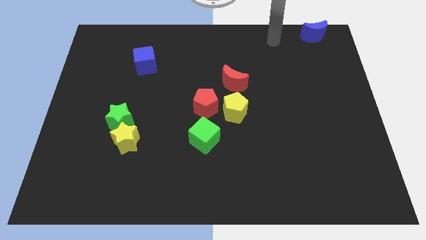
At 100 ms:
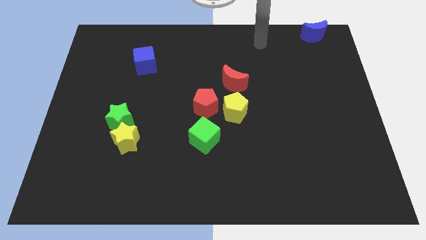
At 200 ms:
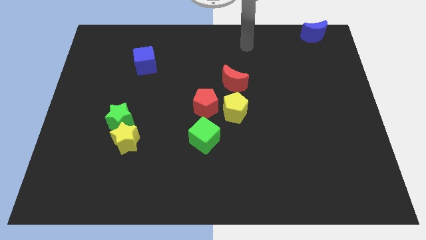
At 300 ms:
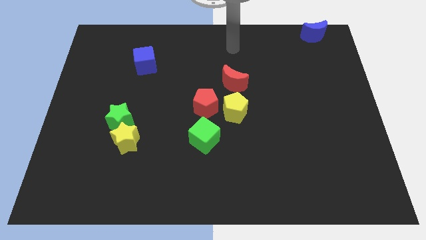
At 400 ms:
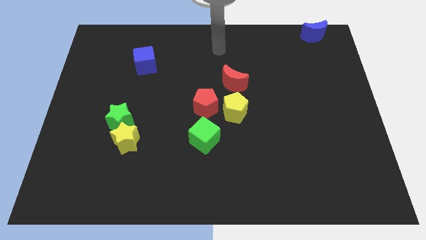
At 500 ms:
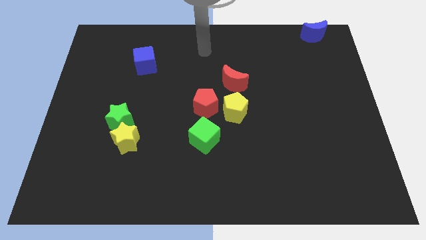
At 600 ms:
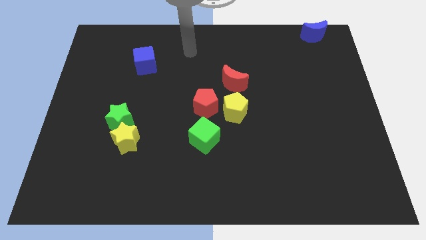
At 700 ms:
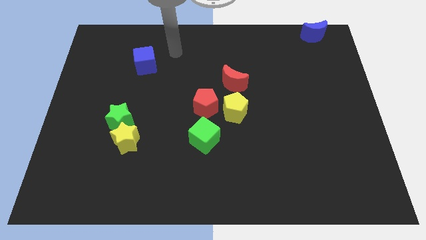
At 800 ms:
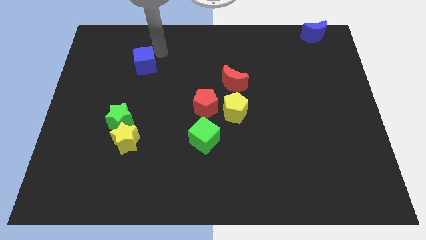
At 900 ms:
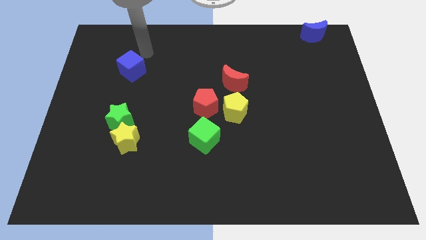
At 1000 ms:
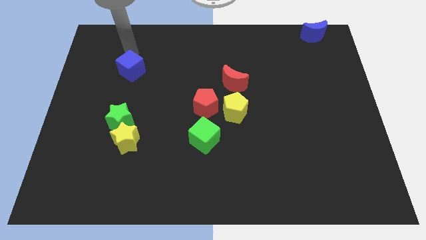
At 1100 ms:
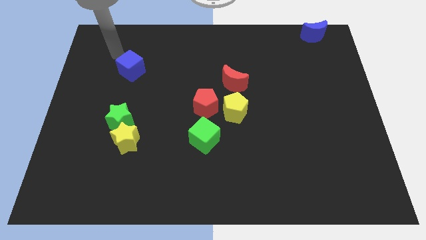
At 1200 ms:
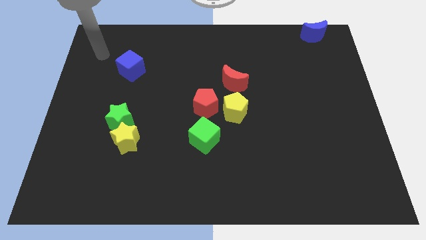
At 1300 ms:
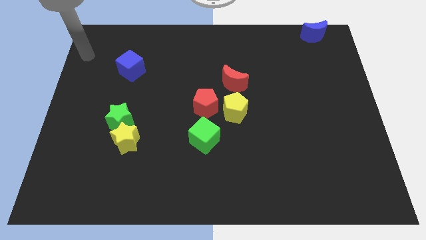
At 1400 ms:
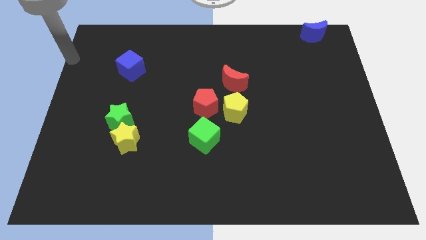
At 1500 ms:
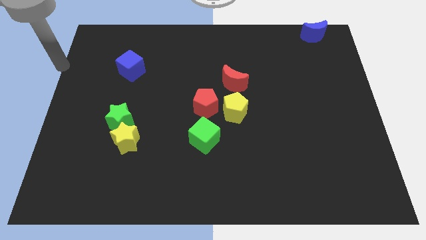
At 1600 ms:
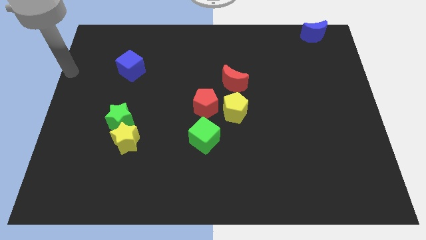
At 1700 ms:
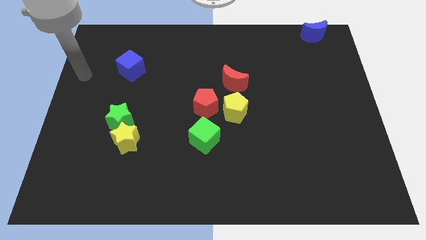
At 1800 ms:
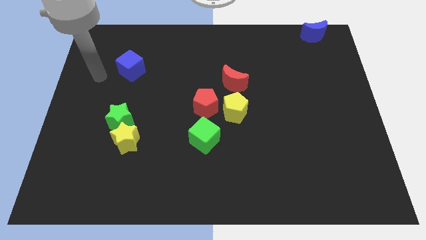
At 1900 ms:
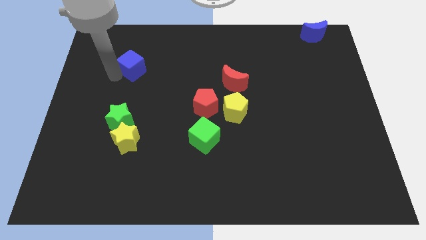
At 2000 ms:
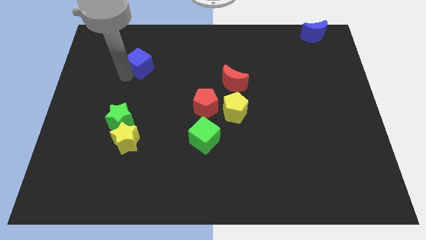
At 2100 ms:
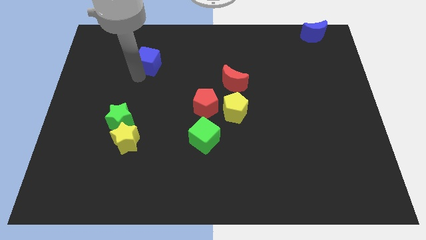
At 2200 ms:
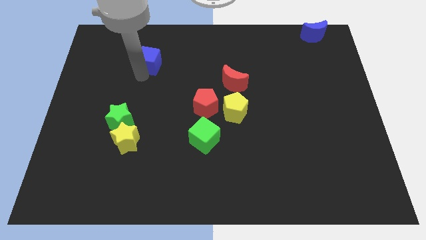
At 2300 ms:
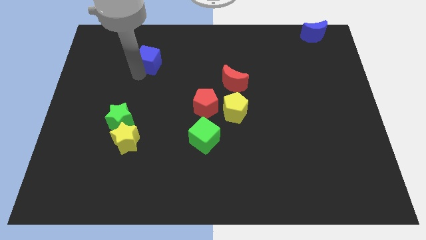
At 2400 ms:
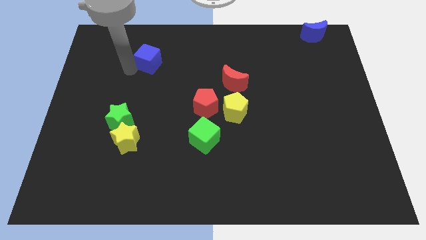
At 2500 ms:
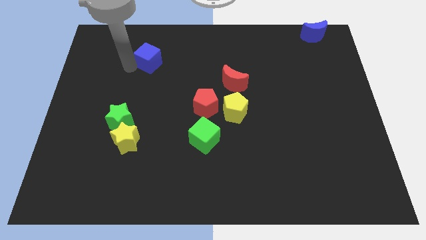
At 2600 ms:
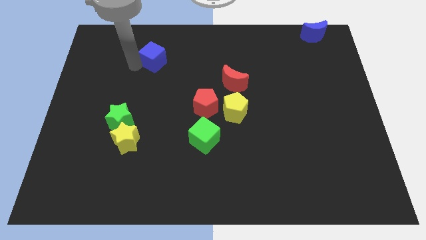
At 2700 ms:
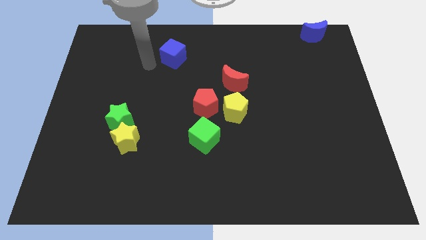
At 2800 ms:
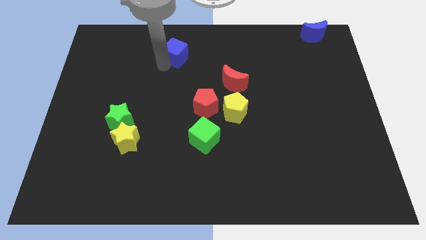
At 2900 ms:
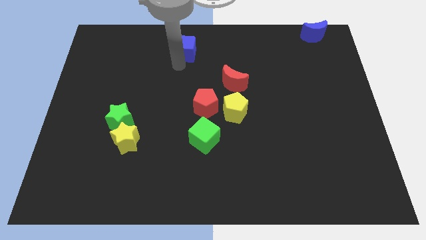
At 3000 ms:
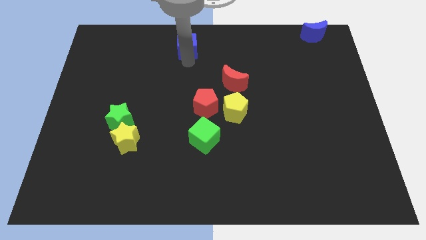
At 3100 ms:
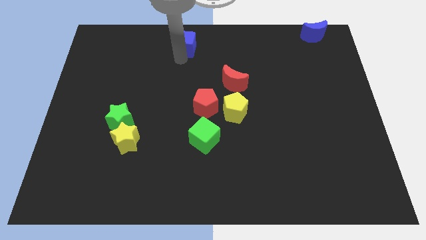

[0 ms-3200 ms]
move the blue cube towards the top center of the board

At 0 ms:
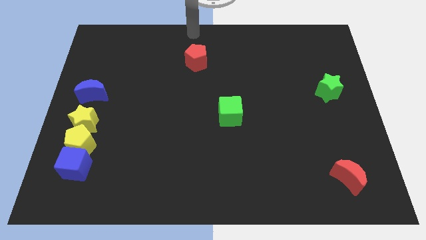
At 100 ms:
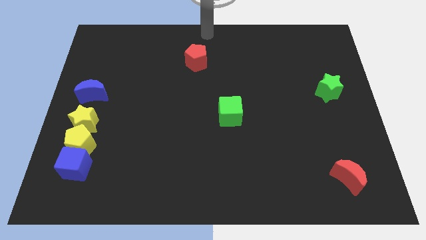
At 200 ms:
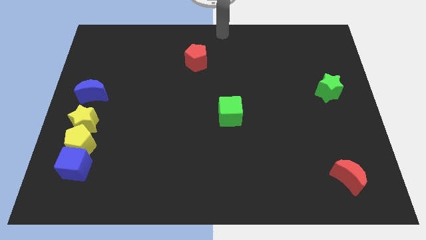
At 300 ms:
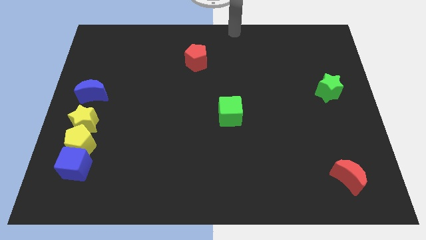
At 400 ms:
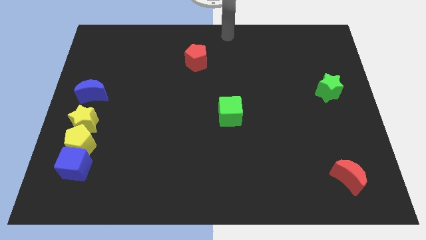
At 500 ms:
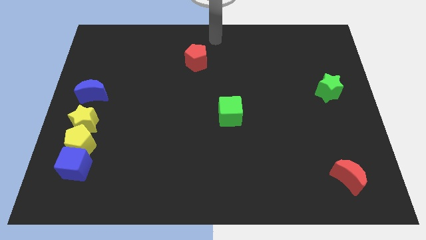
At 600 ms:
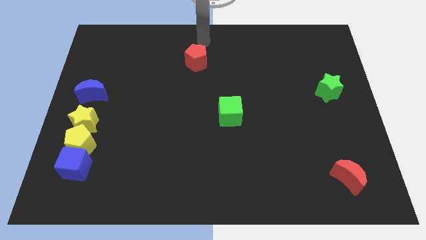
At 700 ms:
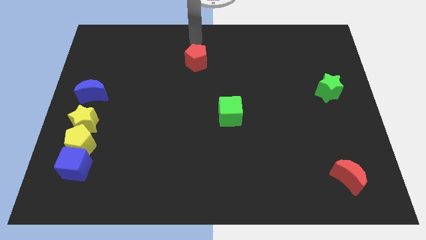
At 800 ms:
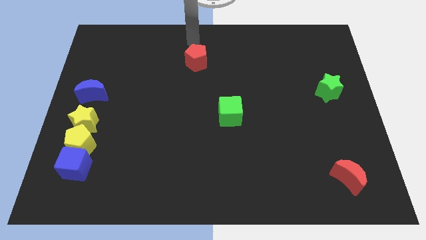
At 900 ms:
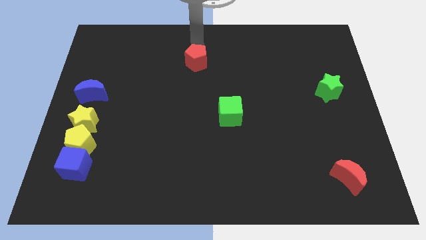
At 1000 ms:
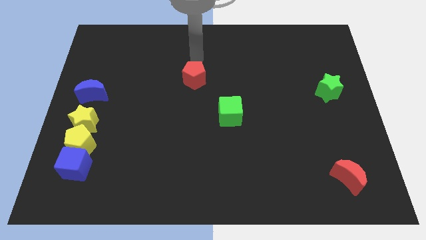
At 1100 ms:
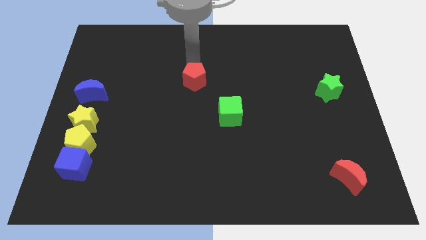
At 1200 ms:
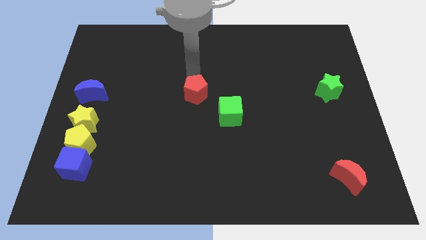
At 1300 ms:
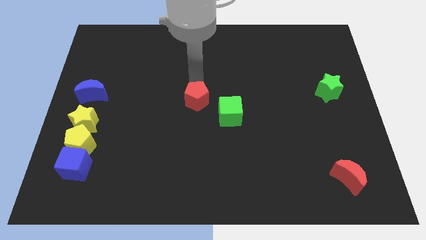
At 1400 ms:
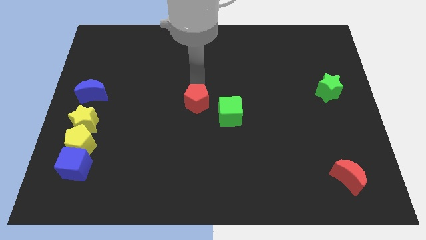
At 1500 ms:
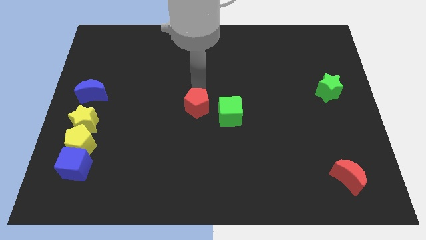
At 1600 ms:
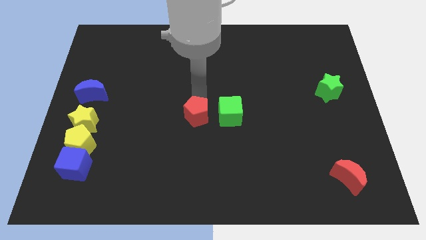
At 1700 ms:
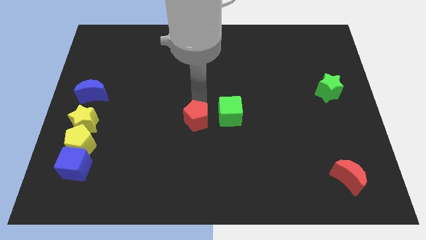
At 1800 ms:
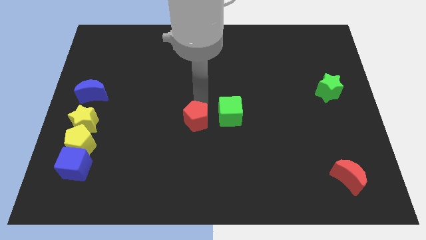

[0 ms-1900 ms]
move the red pentagon to the left of green cube

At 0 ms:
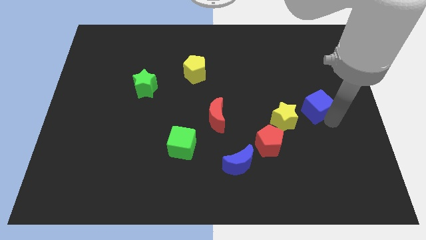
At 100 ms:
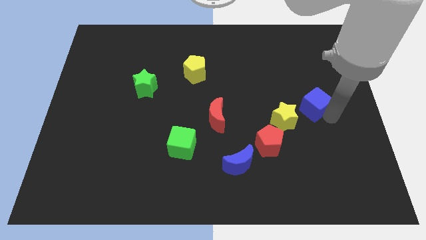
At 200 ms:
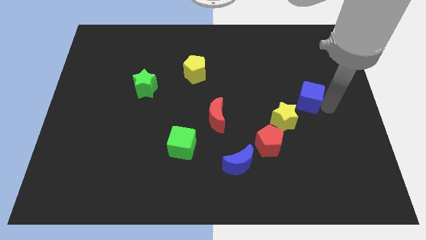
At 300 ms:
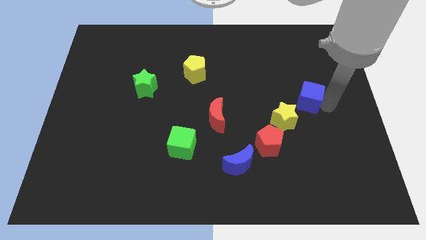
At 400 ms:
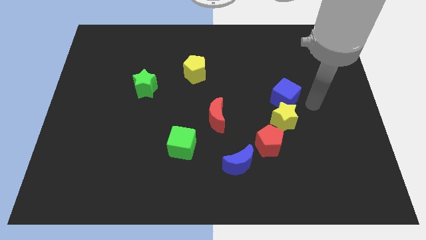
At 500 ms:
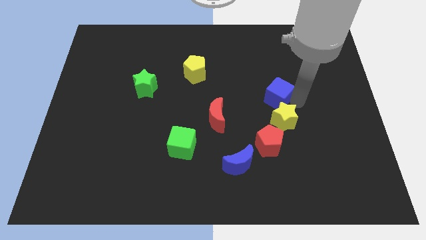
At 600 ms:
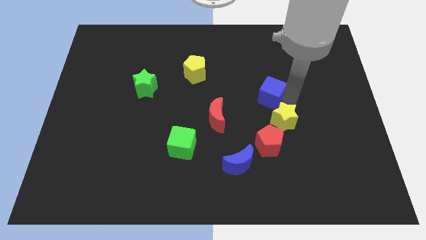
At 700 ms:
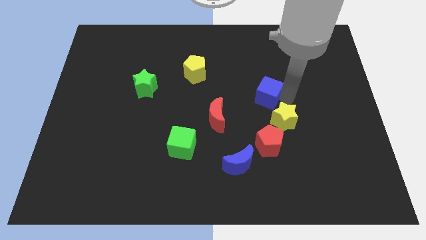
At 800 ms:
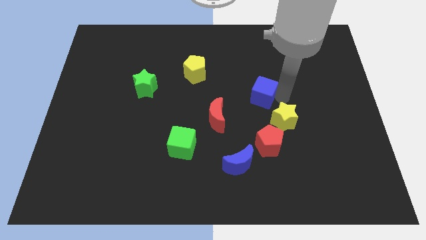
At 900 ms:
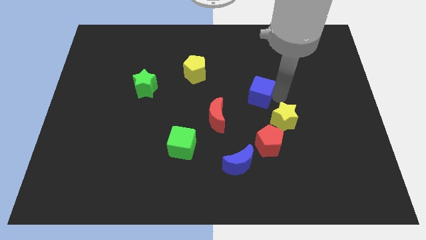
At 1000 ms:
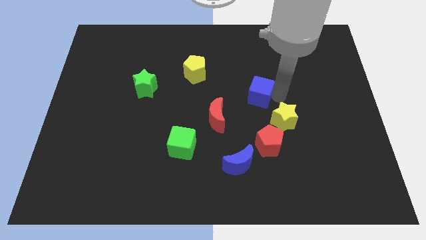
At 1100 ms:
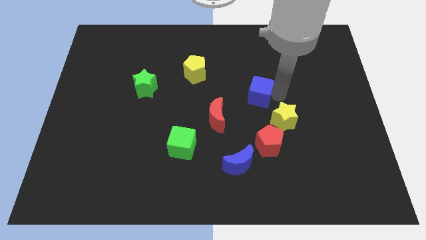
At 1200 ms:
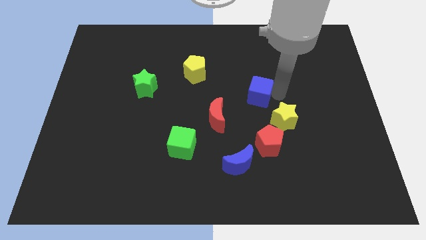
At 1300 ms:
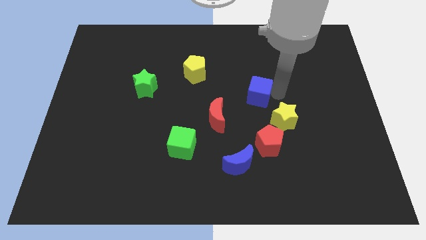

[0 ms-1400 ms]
push the blue cube above red pentagon

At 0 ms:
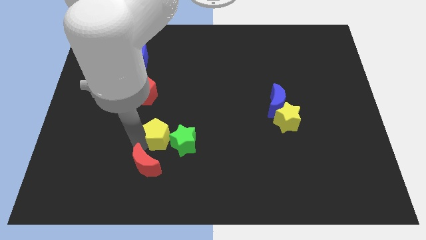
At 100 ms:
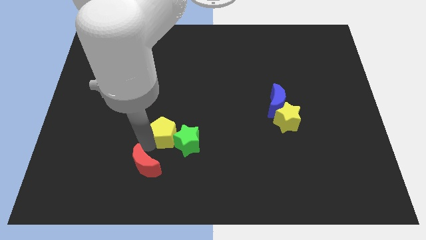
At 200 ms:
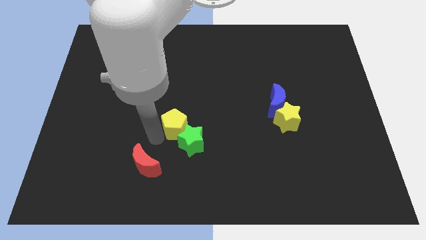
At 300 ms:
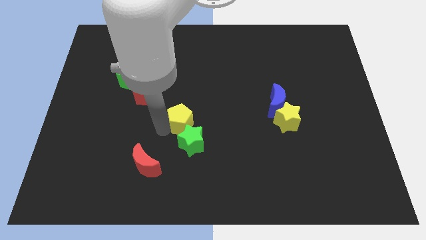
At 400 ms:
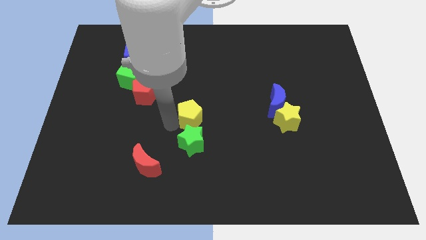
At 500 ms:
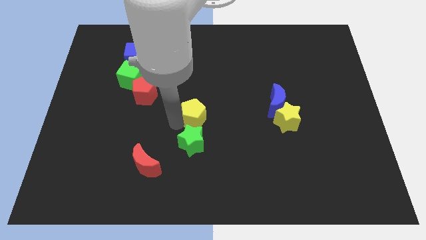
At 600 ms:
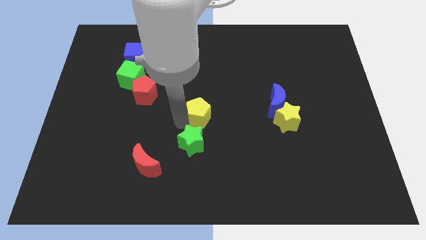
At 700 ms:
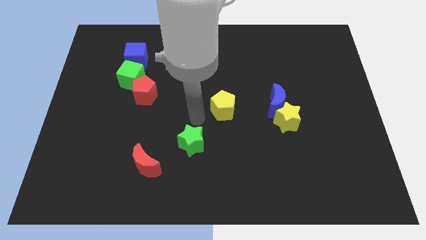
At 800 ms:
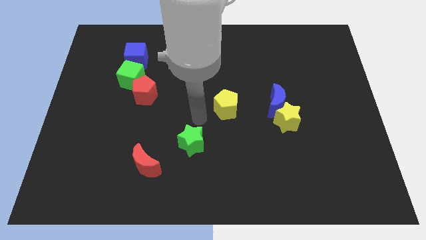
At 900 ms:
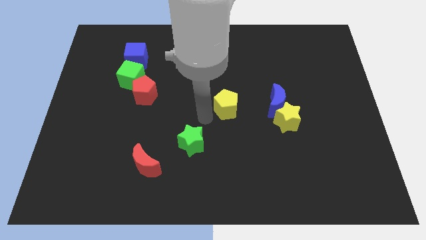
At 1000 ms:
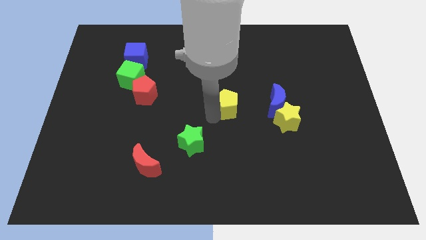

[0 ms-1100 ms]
push the yellow pentagon towards the center of the board

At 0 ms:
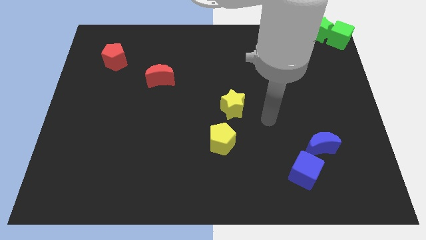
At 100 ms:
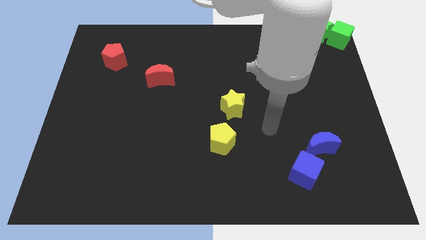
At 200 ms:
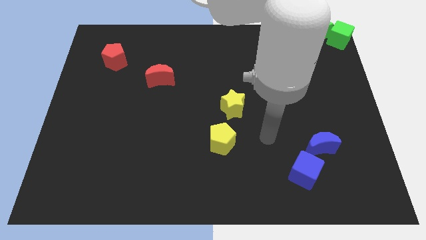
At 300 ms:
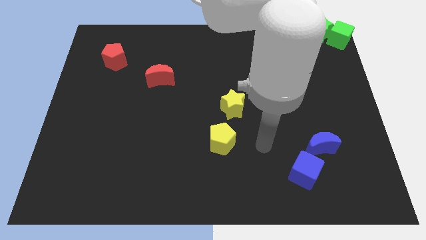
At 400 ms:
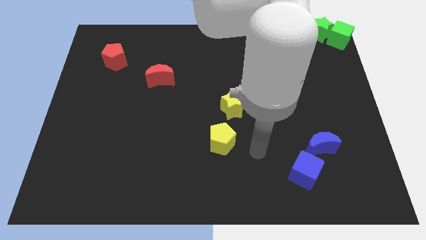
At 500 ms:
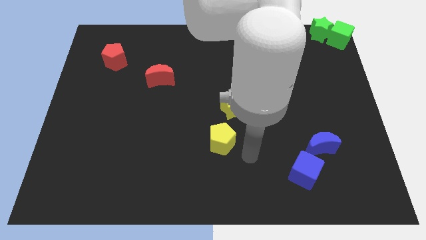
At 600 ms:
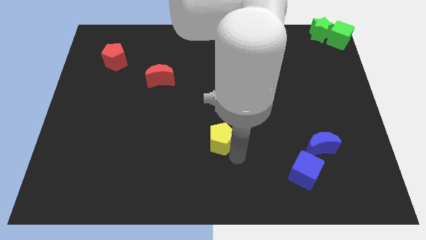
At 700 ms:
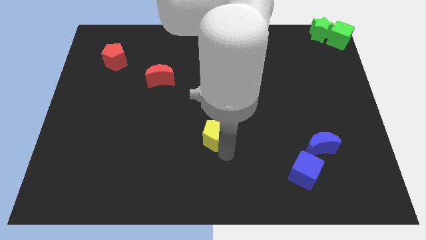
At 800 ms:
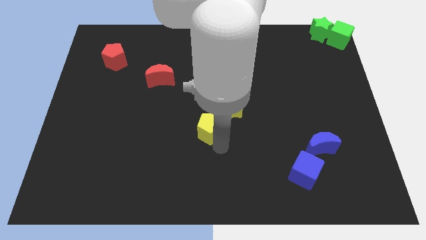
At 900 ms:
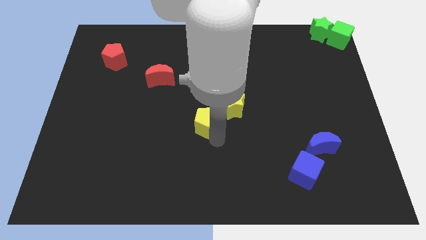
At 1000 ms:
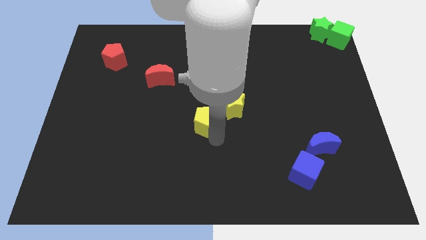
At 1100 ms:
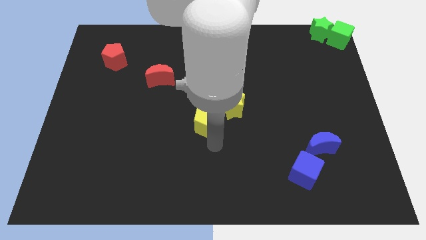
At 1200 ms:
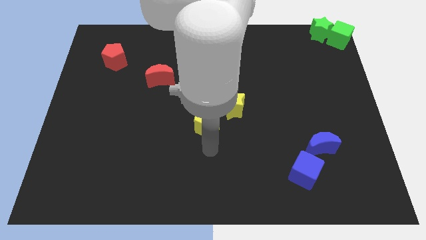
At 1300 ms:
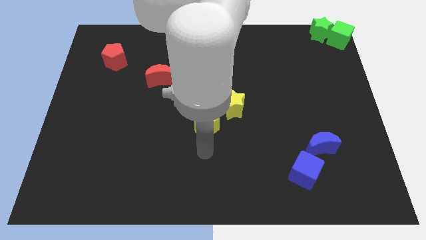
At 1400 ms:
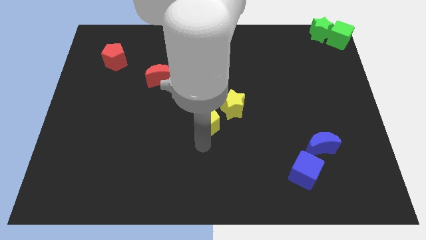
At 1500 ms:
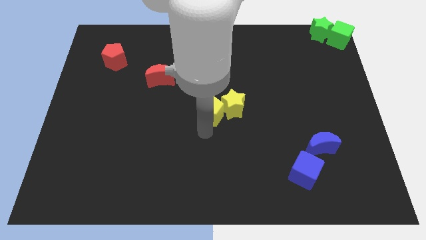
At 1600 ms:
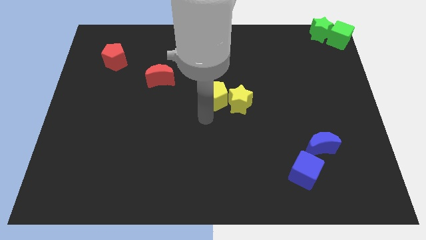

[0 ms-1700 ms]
place the yellow pentagon left to the yellow star
